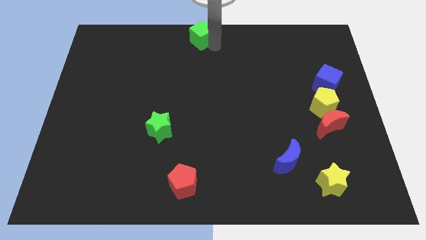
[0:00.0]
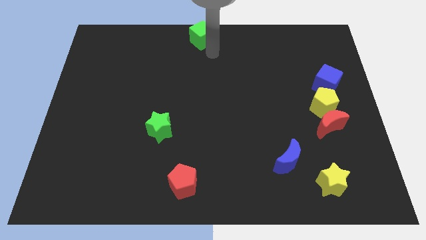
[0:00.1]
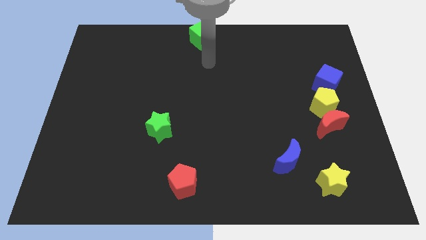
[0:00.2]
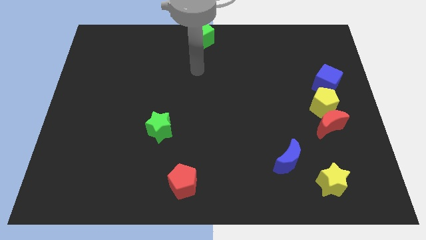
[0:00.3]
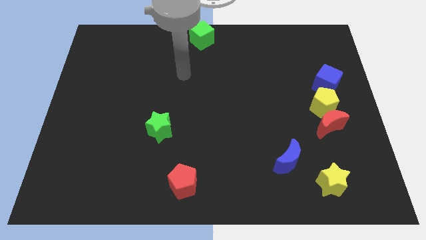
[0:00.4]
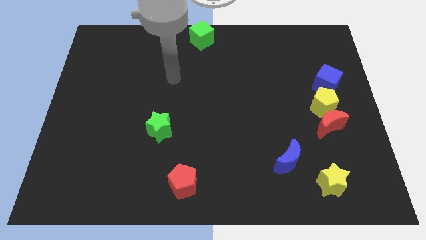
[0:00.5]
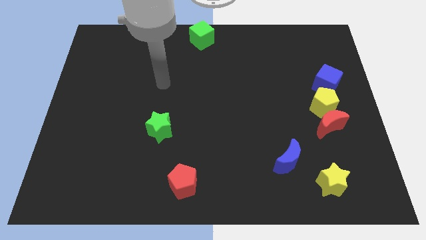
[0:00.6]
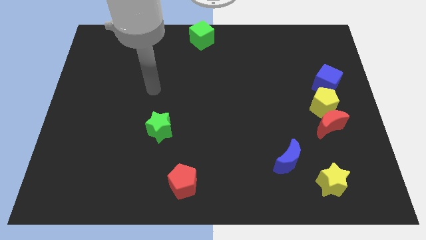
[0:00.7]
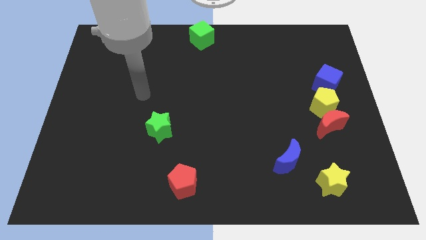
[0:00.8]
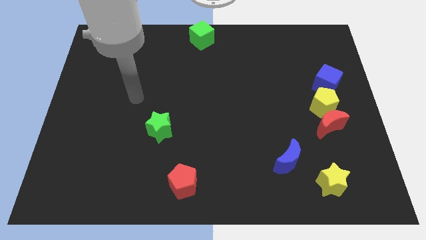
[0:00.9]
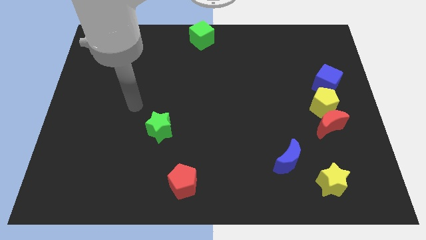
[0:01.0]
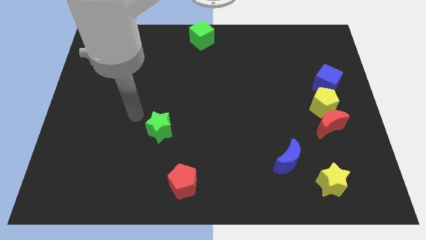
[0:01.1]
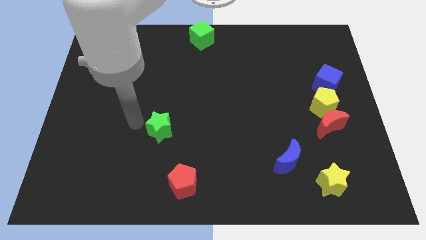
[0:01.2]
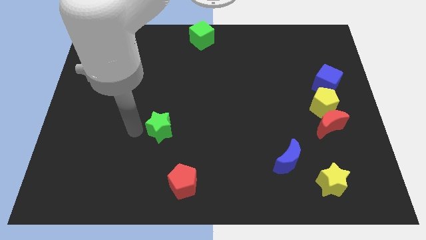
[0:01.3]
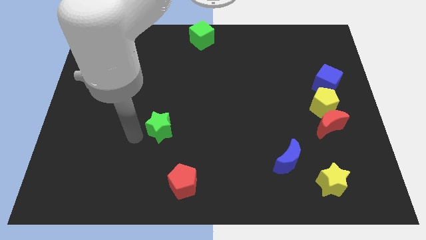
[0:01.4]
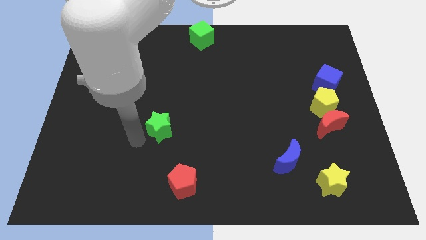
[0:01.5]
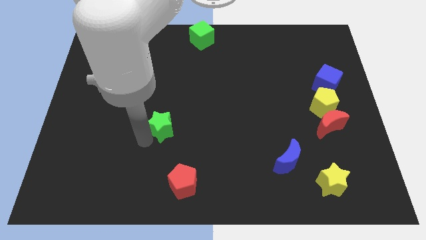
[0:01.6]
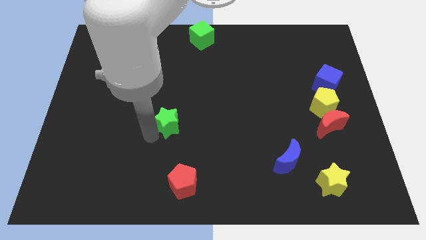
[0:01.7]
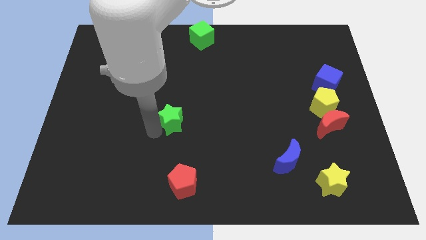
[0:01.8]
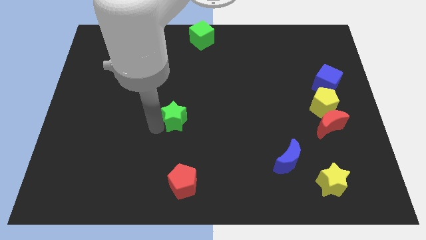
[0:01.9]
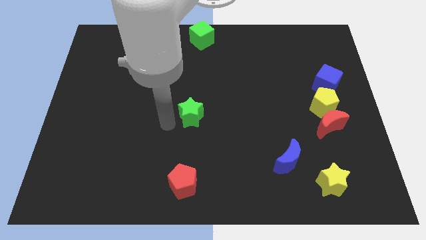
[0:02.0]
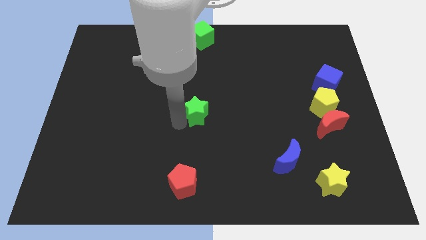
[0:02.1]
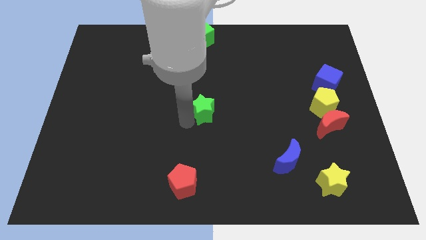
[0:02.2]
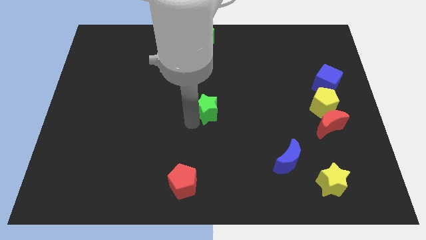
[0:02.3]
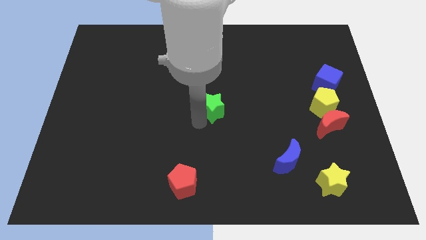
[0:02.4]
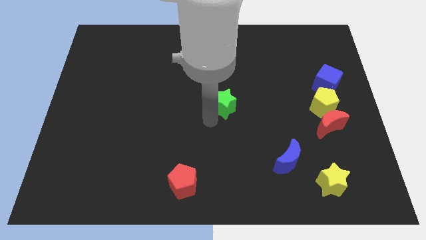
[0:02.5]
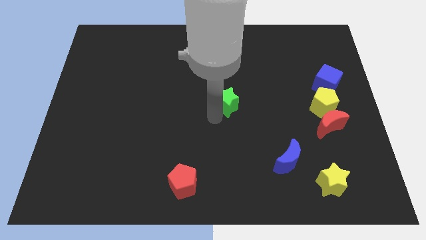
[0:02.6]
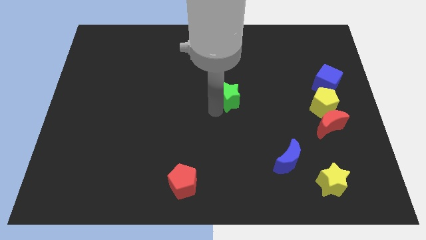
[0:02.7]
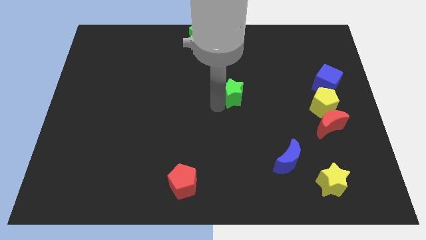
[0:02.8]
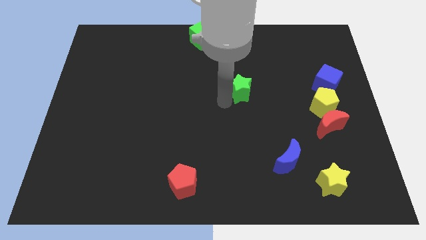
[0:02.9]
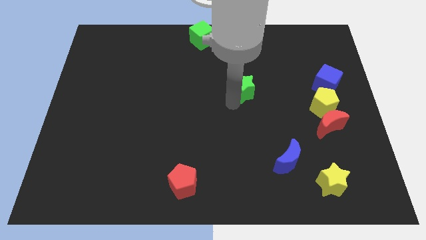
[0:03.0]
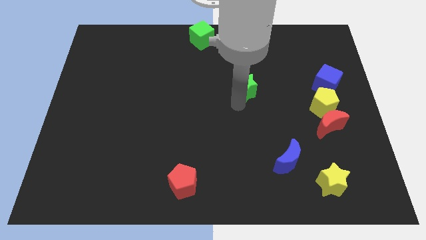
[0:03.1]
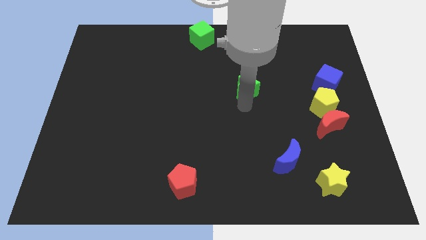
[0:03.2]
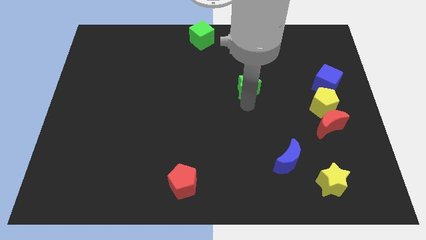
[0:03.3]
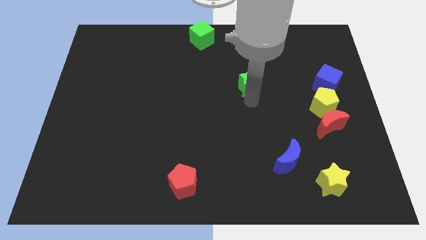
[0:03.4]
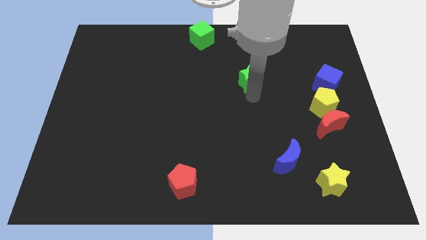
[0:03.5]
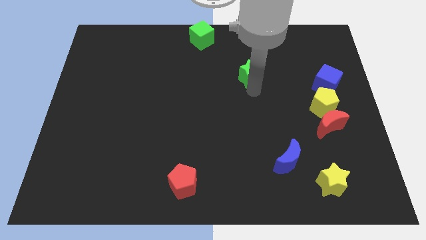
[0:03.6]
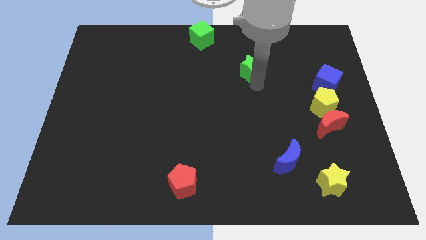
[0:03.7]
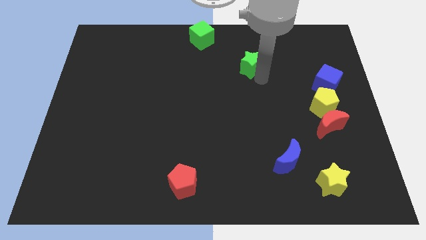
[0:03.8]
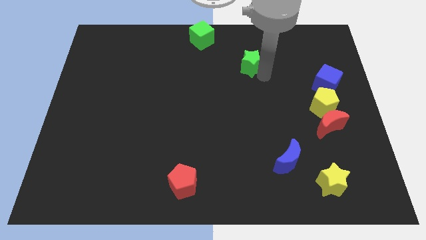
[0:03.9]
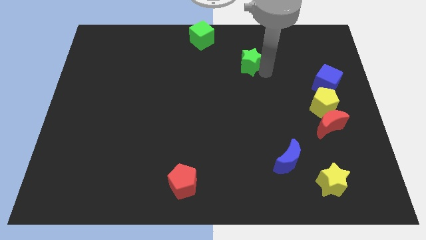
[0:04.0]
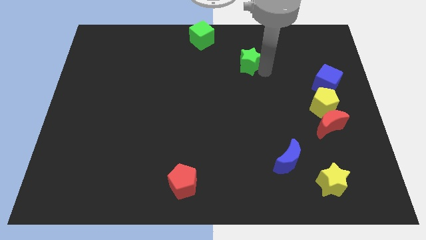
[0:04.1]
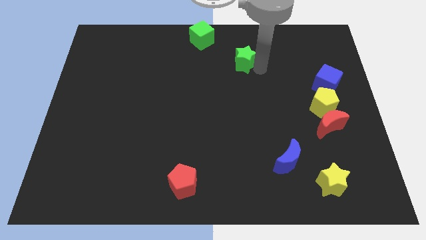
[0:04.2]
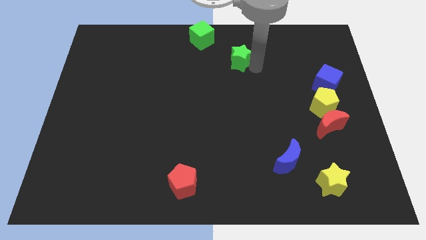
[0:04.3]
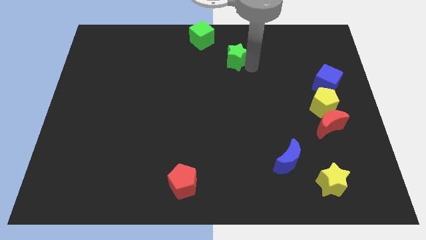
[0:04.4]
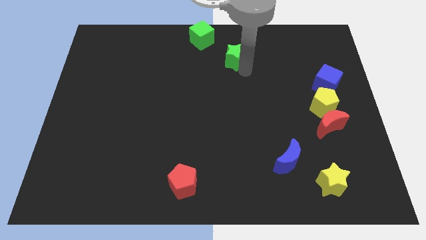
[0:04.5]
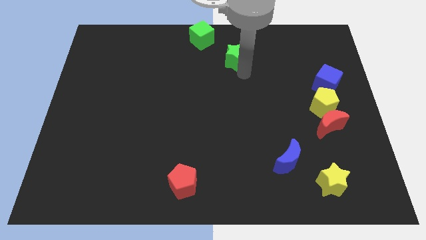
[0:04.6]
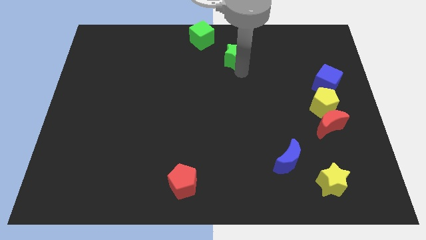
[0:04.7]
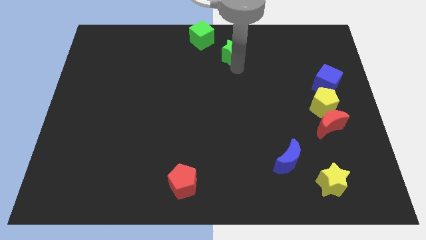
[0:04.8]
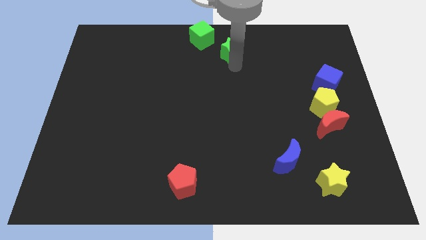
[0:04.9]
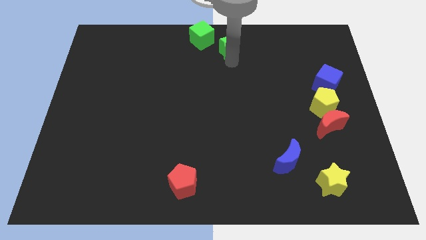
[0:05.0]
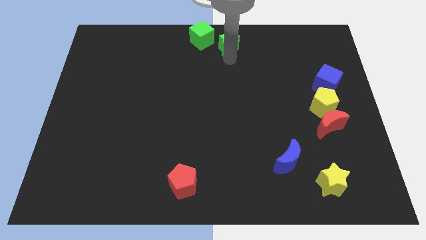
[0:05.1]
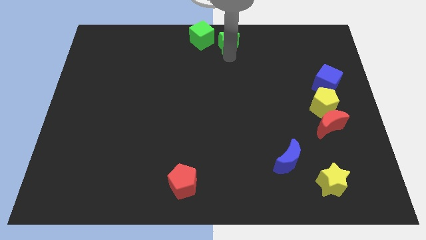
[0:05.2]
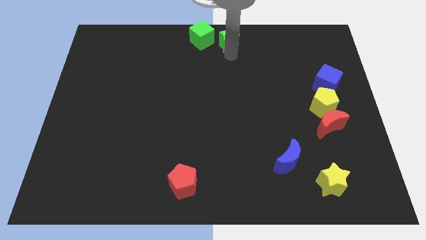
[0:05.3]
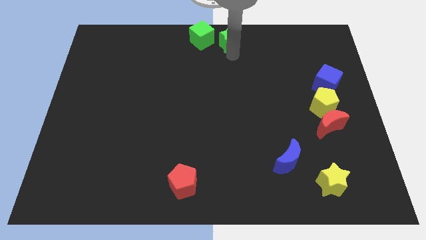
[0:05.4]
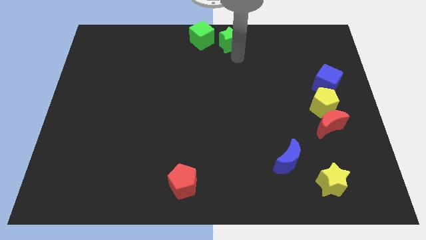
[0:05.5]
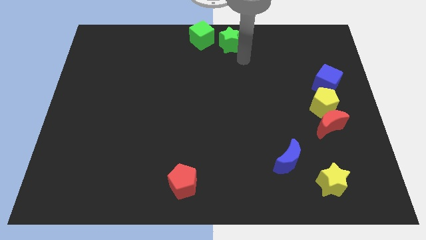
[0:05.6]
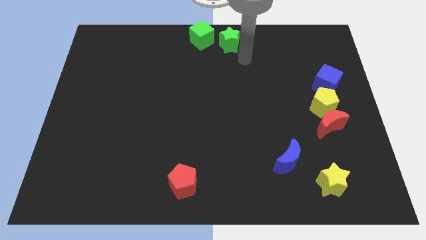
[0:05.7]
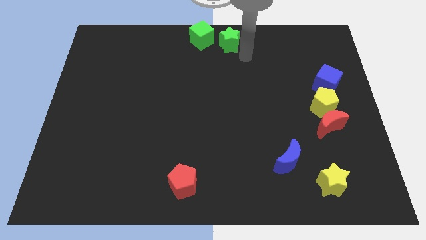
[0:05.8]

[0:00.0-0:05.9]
push the green star to the top center of the board

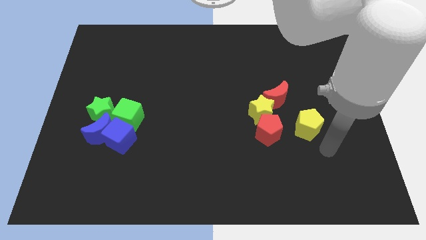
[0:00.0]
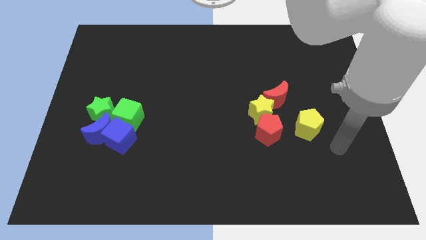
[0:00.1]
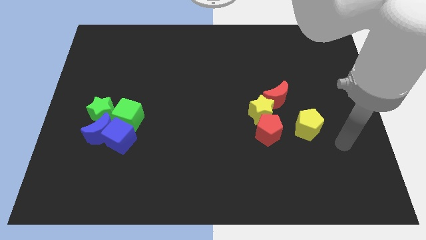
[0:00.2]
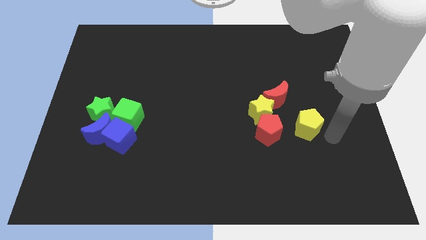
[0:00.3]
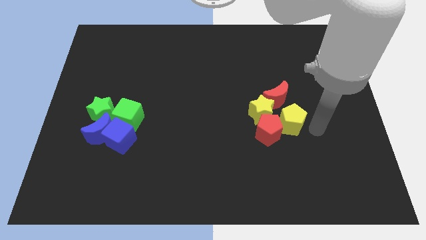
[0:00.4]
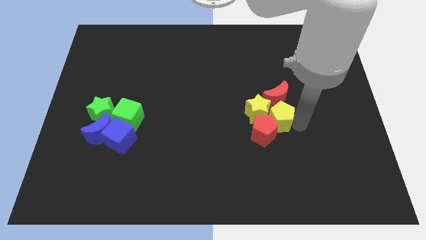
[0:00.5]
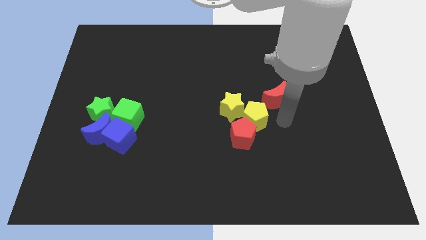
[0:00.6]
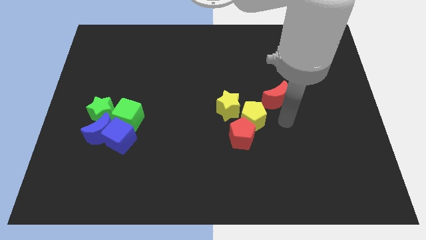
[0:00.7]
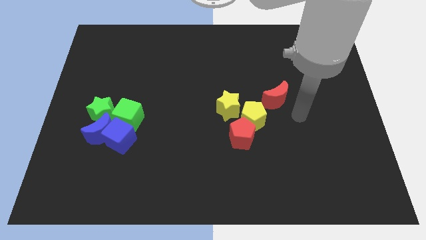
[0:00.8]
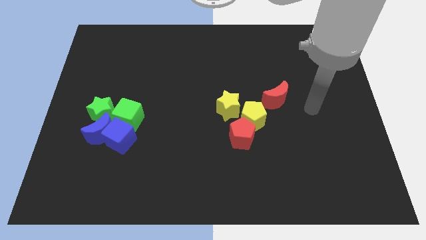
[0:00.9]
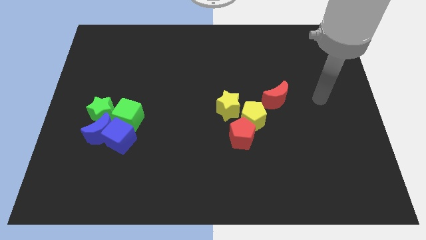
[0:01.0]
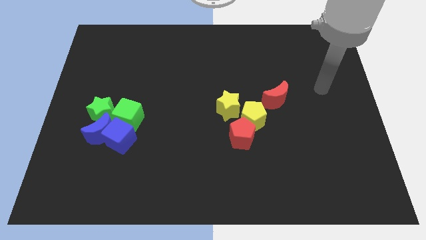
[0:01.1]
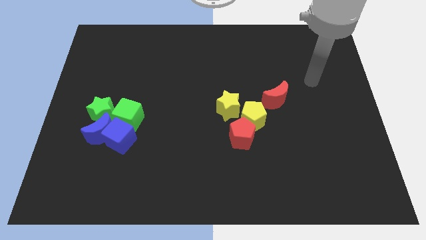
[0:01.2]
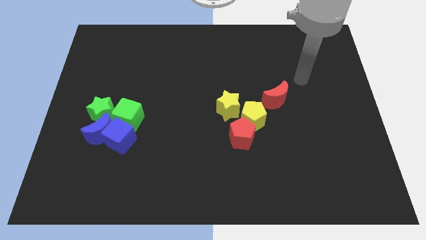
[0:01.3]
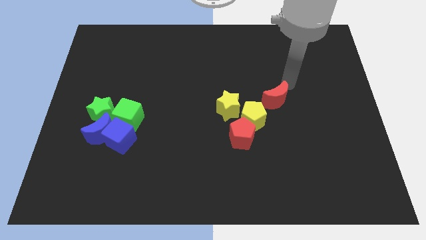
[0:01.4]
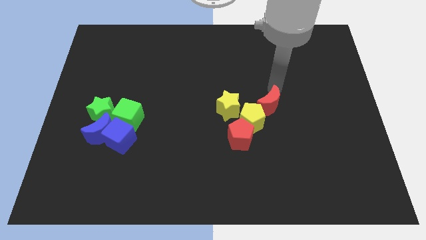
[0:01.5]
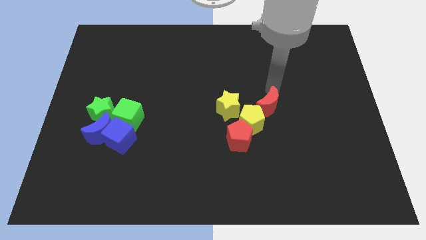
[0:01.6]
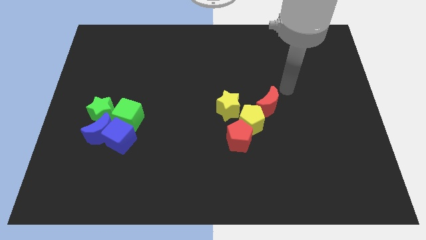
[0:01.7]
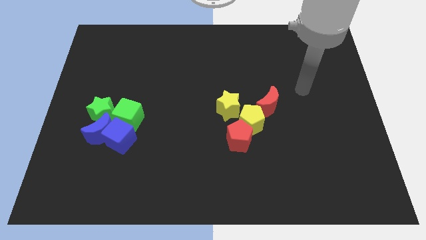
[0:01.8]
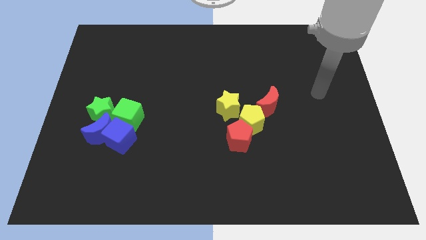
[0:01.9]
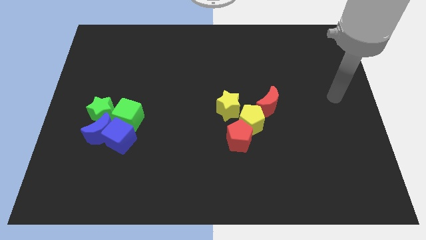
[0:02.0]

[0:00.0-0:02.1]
push the yellow star with yellow pentagon

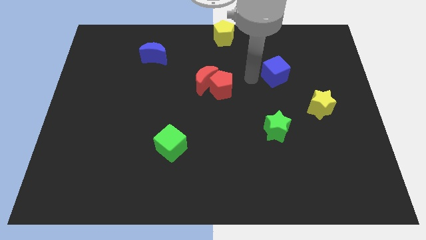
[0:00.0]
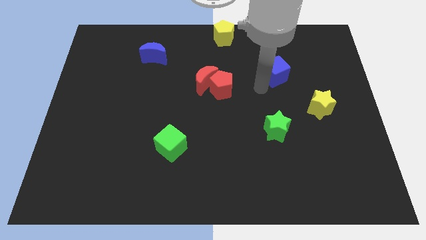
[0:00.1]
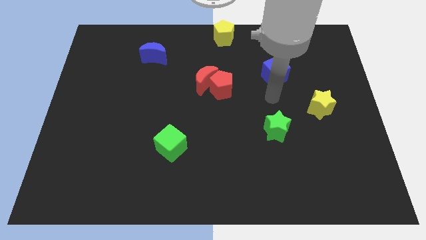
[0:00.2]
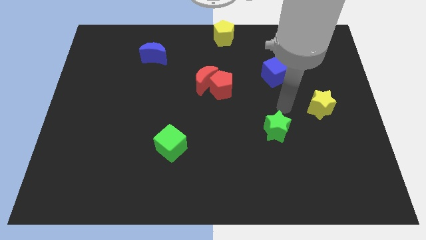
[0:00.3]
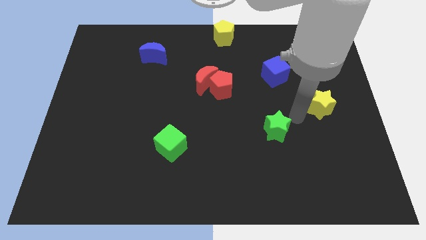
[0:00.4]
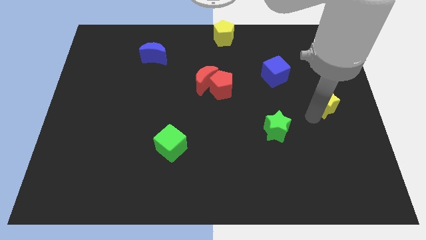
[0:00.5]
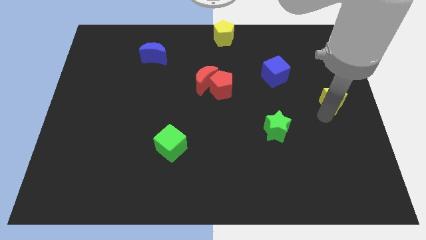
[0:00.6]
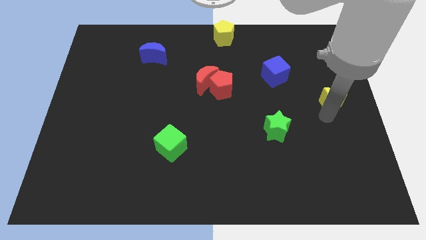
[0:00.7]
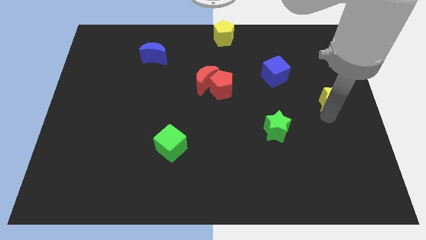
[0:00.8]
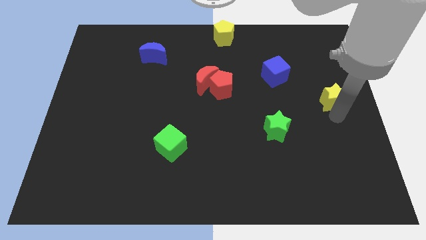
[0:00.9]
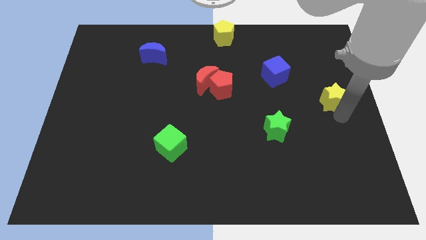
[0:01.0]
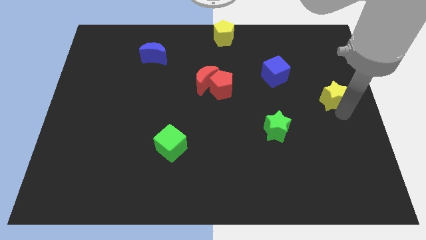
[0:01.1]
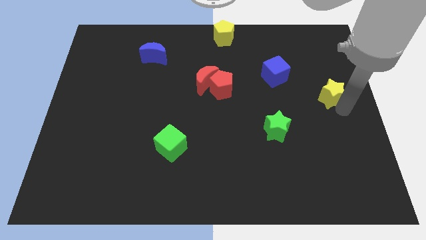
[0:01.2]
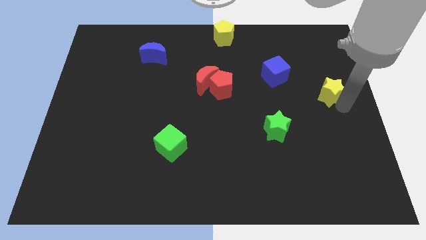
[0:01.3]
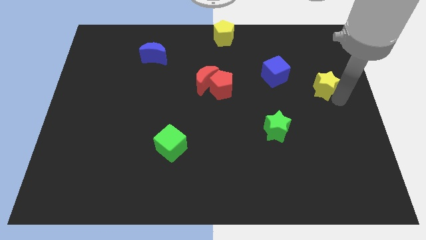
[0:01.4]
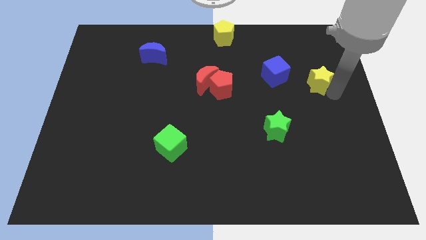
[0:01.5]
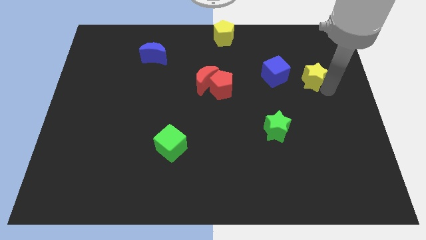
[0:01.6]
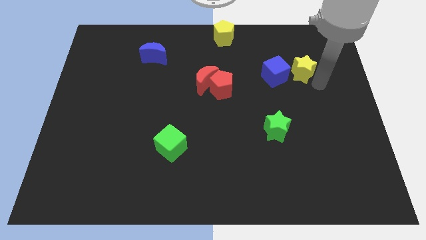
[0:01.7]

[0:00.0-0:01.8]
put the yellow star right to the blue cube
